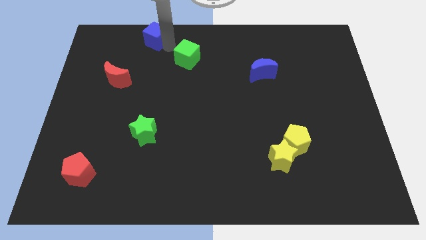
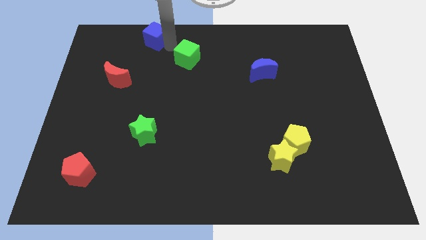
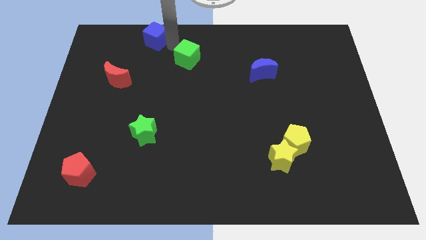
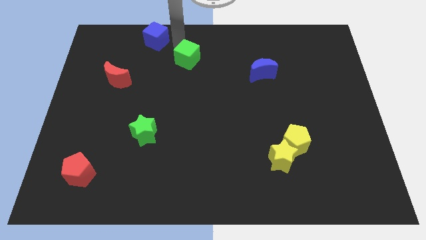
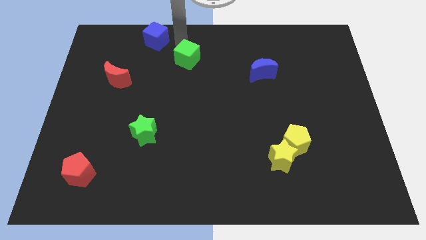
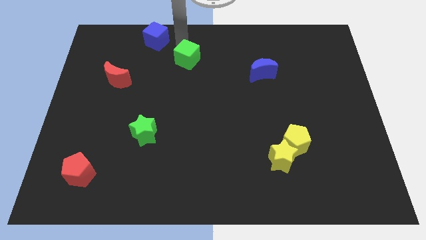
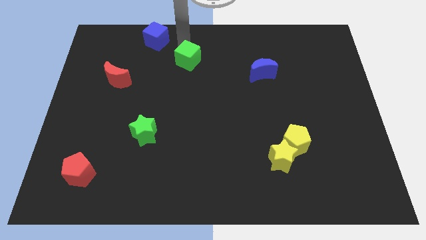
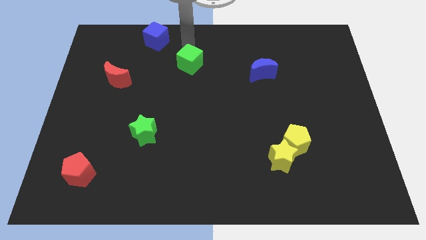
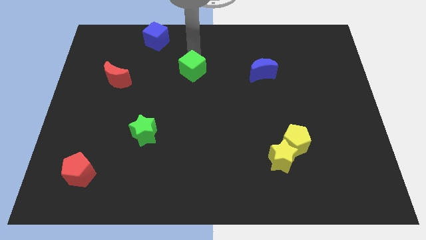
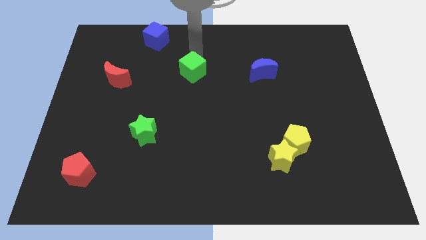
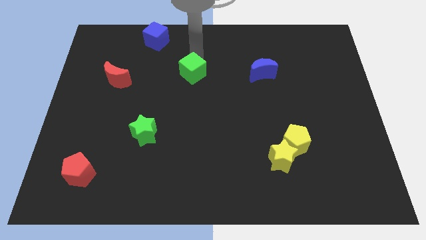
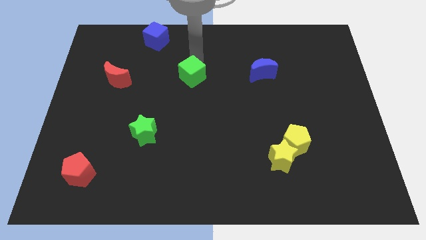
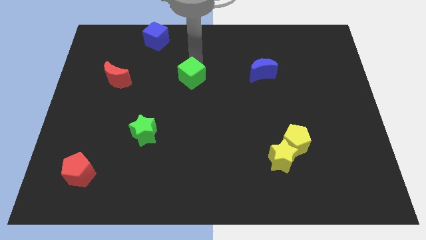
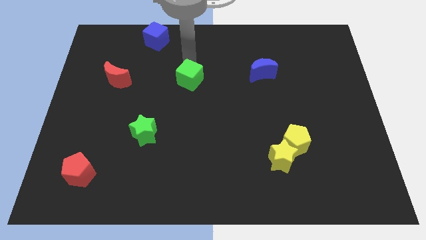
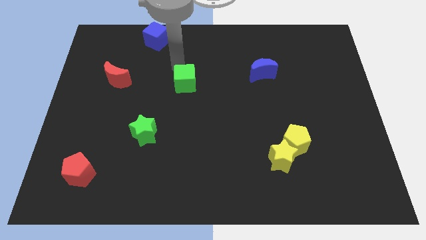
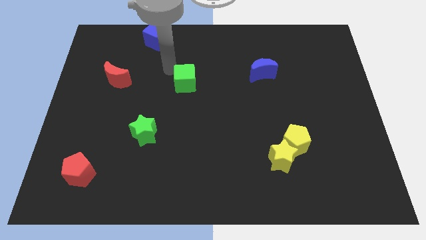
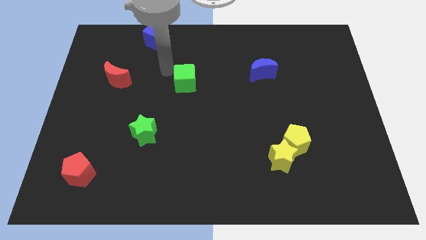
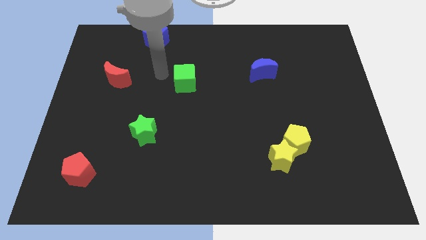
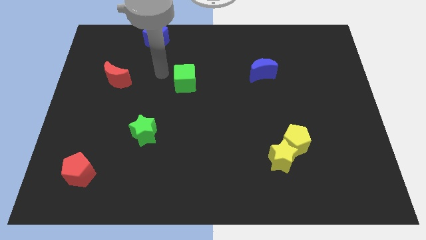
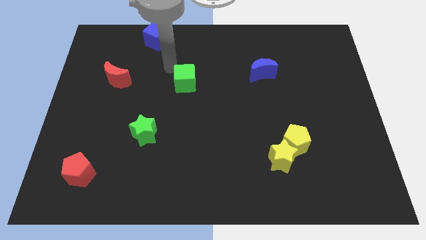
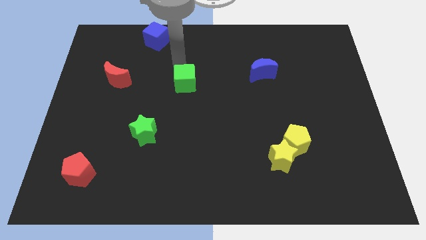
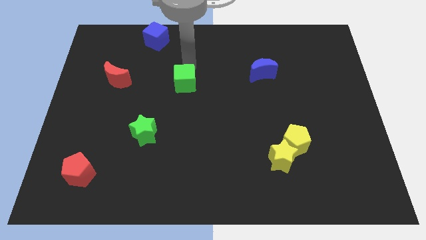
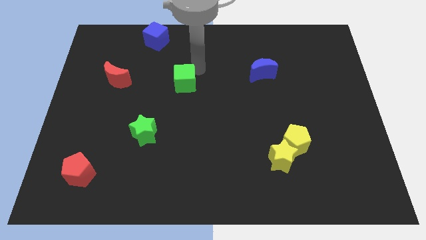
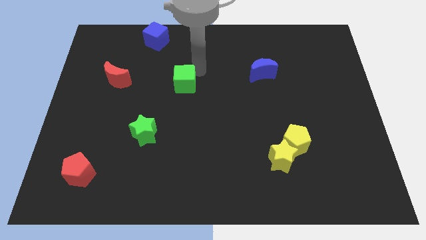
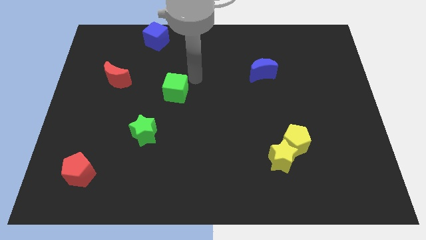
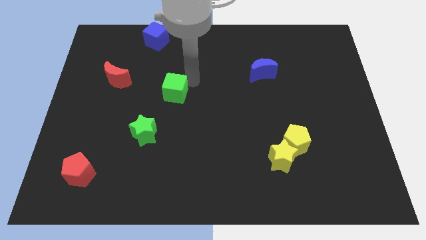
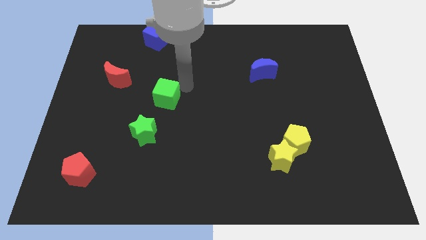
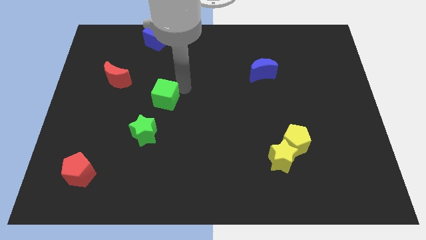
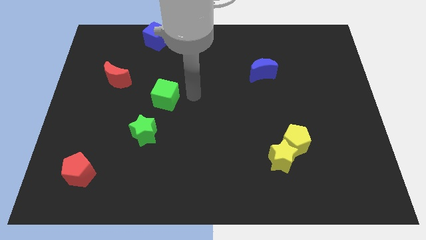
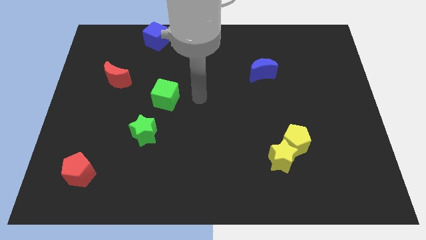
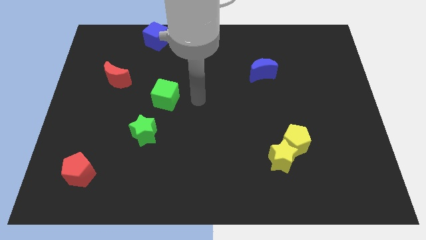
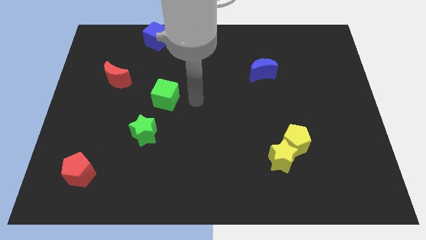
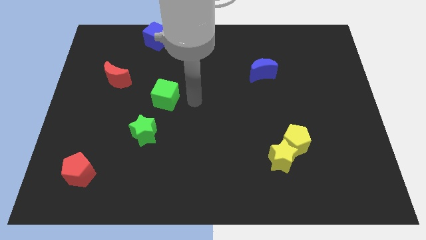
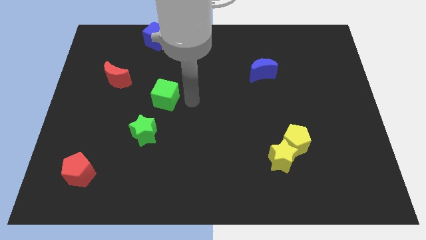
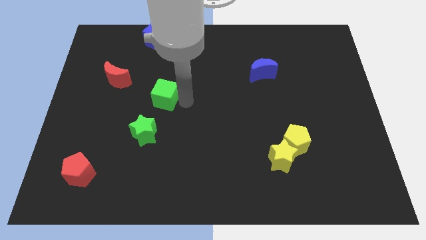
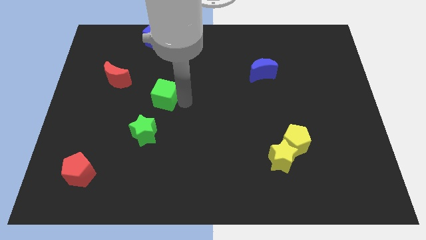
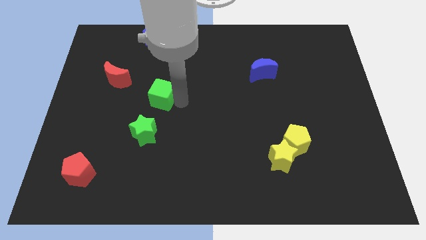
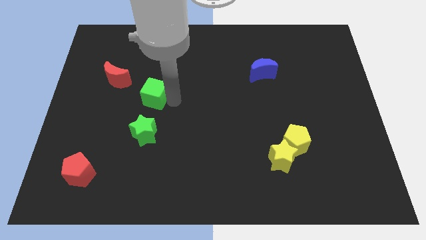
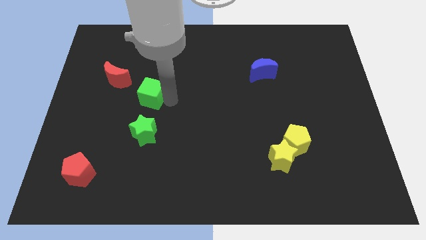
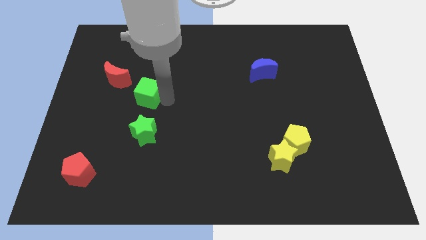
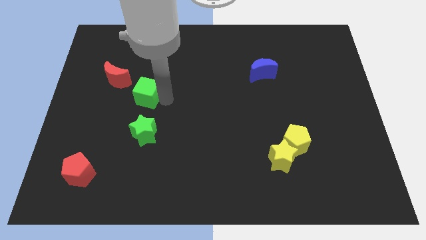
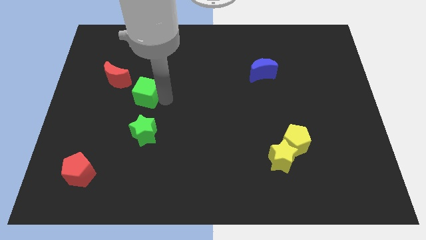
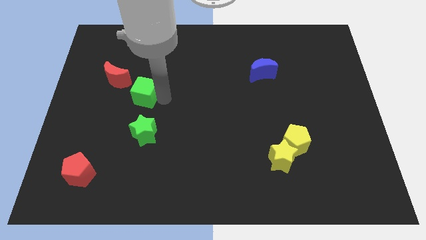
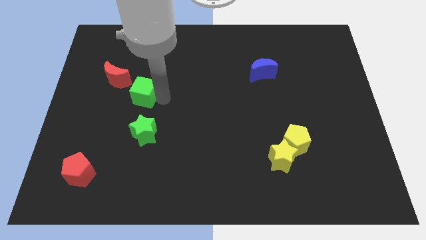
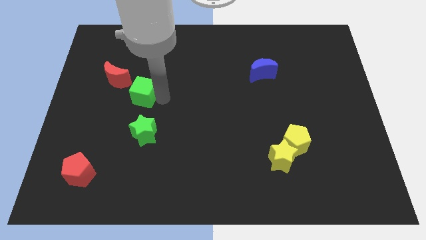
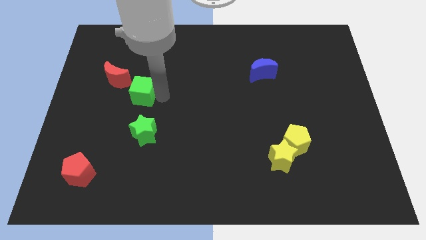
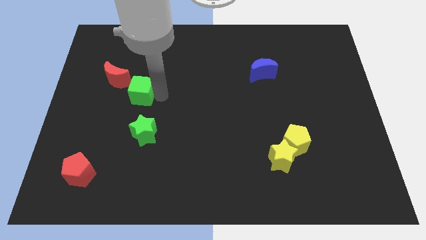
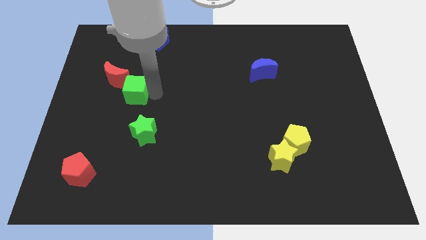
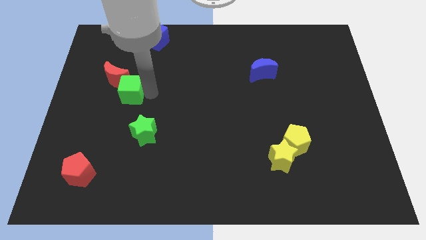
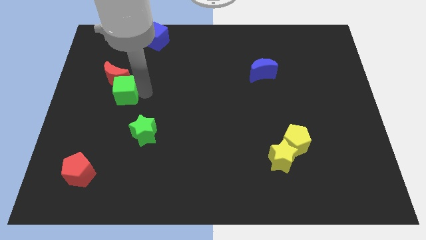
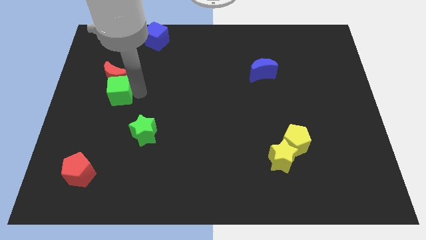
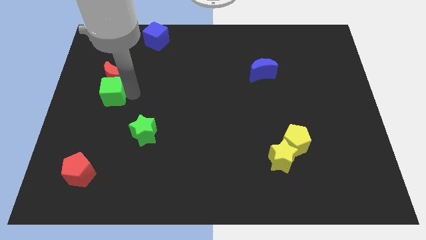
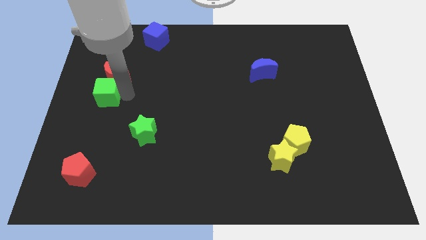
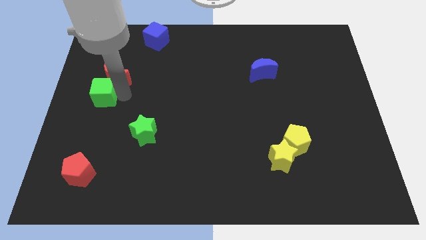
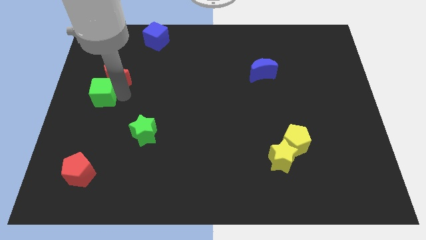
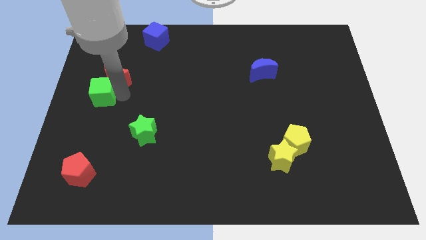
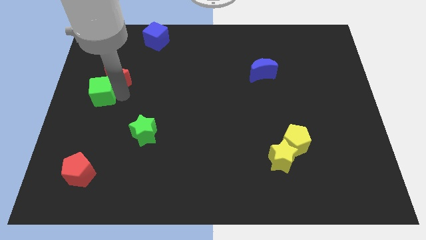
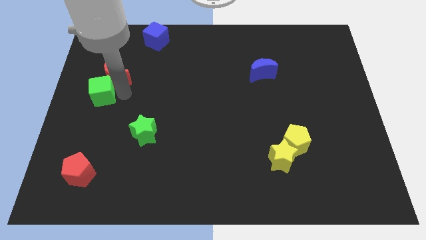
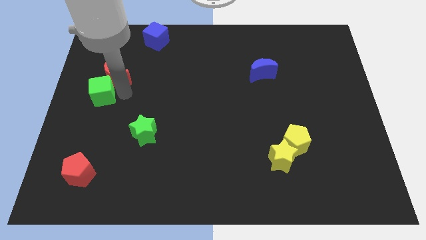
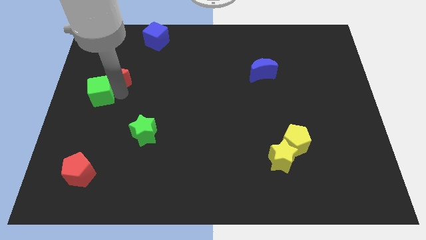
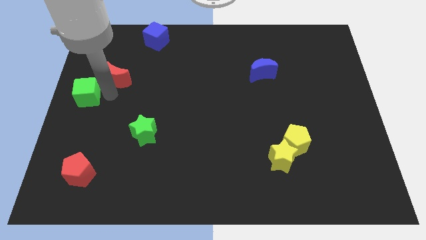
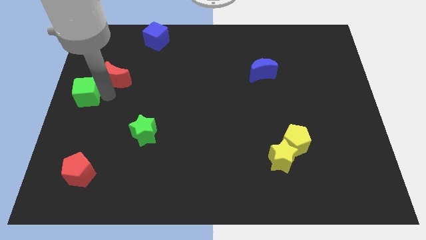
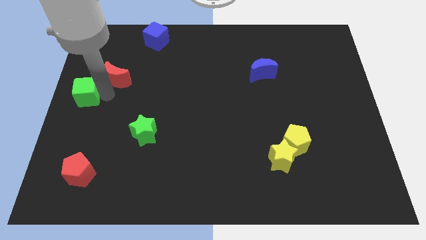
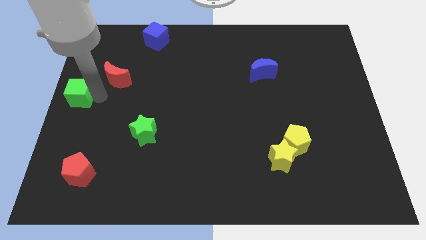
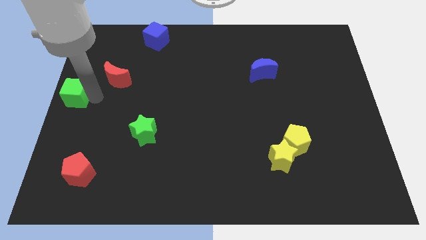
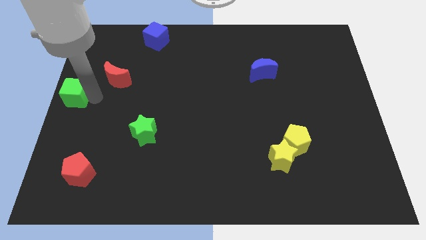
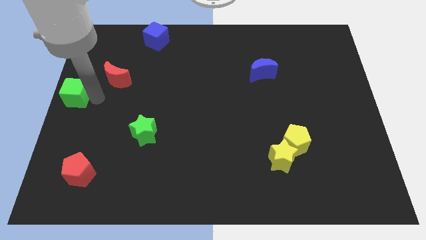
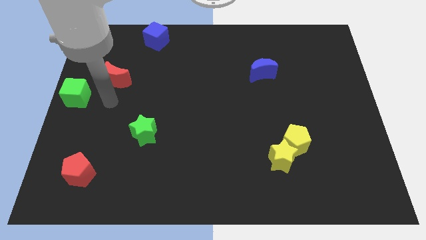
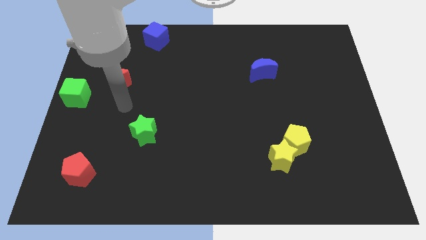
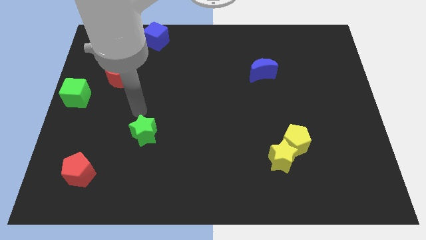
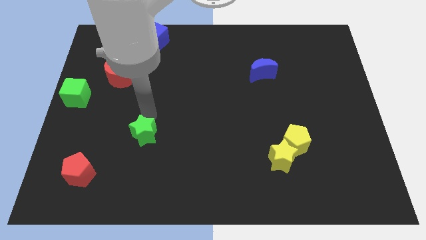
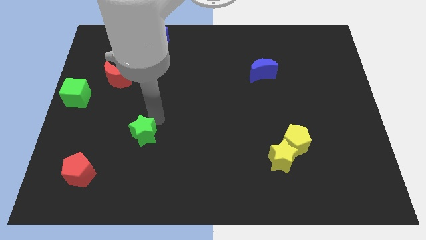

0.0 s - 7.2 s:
move green cube to the left side of the board

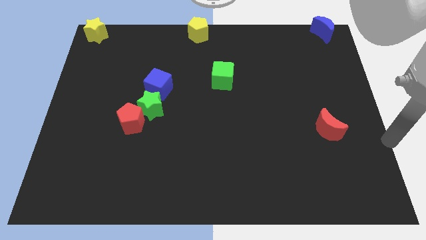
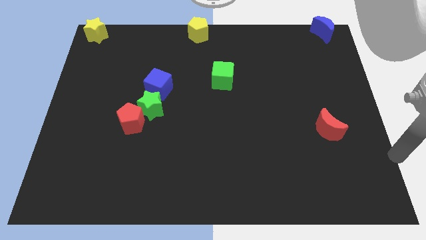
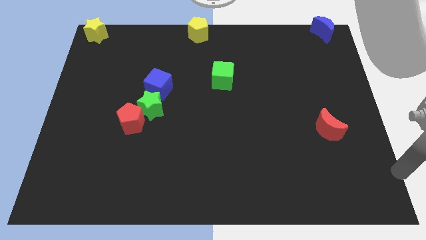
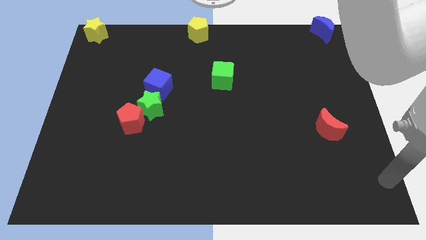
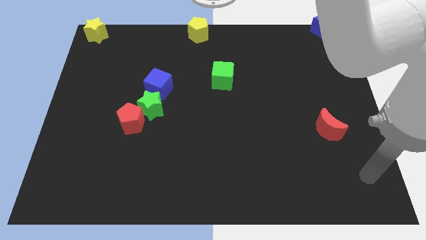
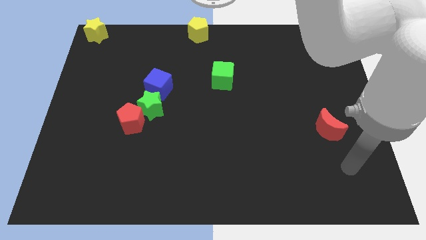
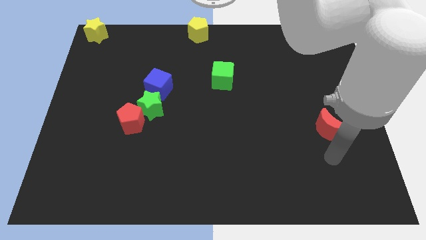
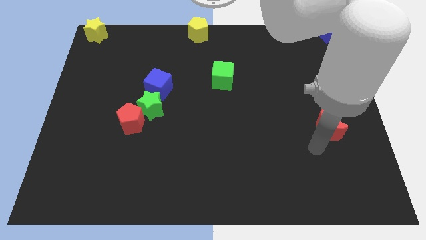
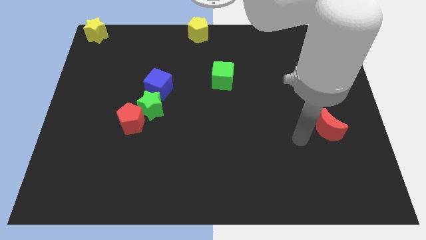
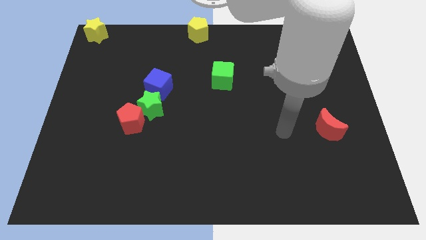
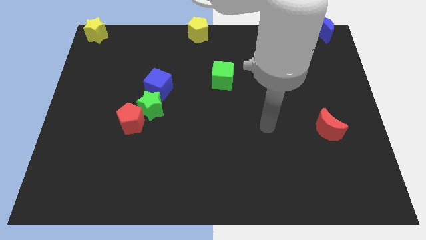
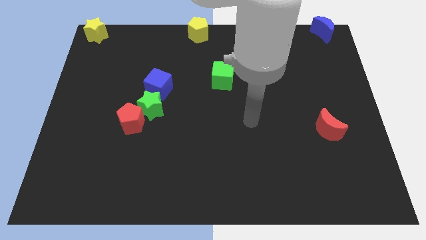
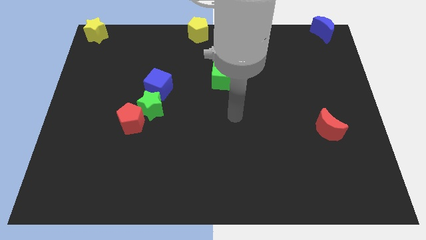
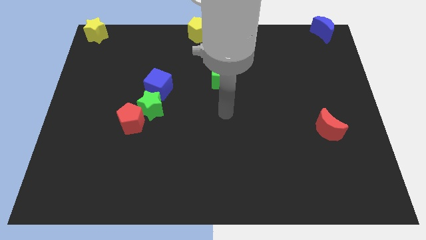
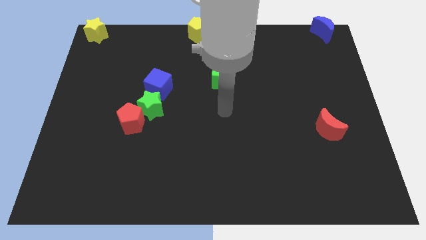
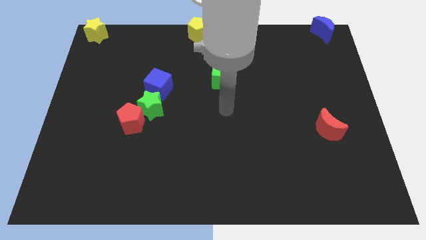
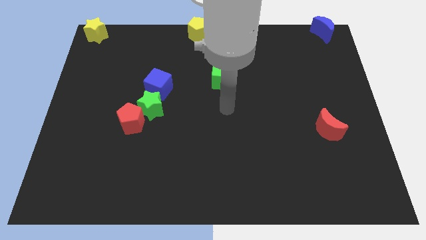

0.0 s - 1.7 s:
place your arm to the bottom of green cube
